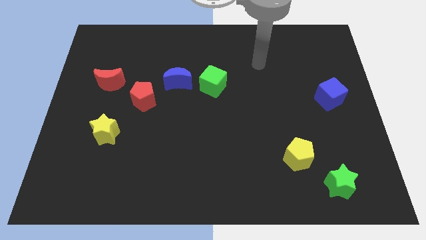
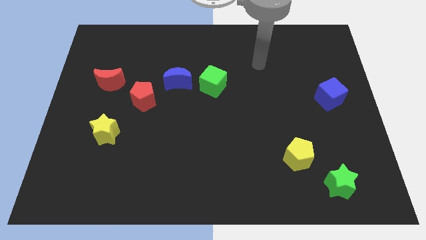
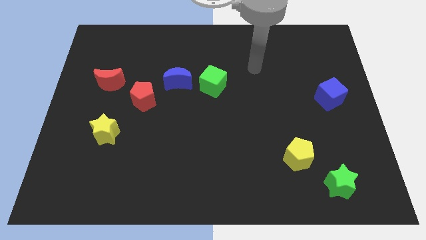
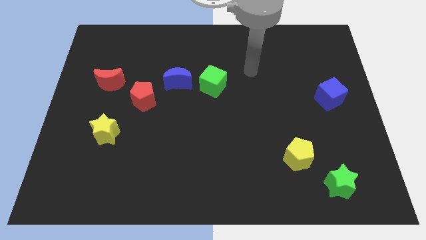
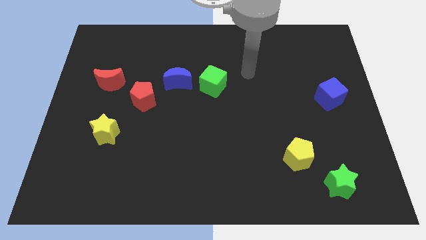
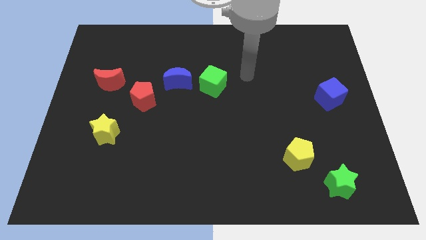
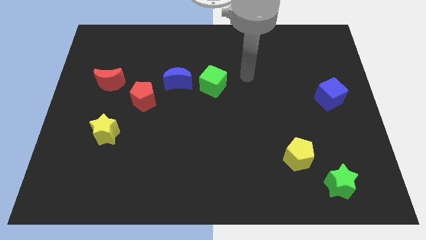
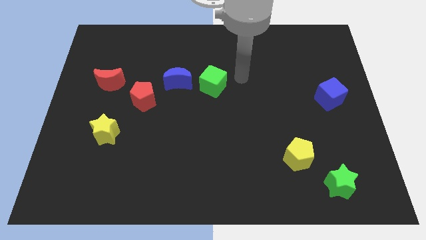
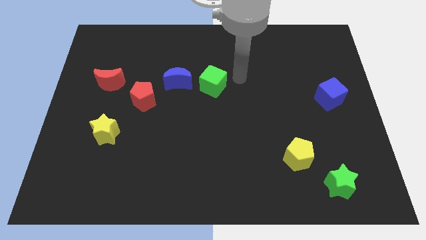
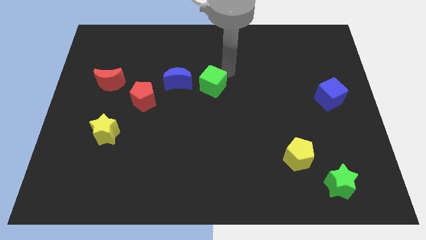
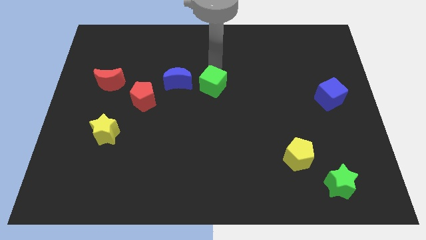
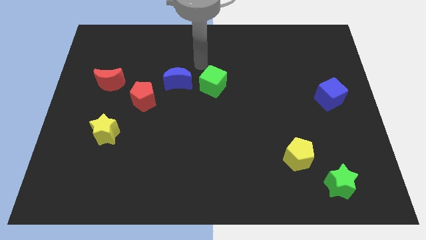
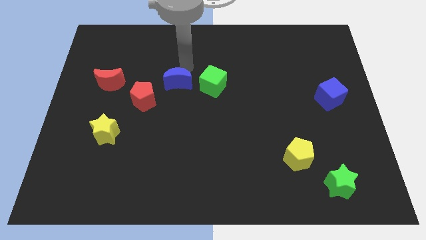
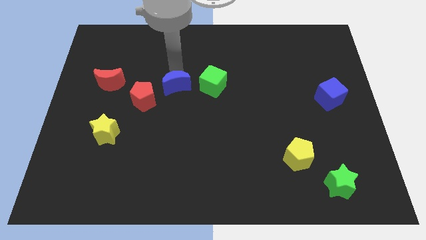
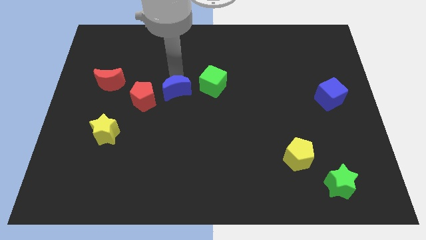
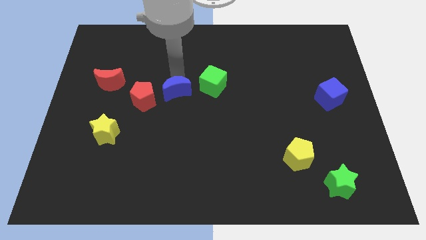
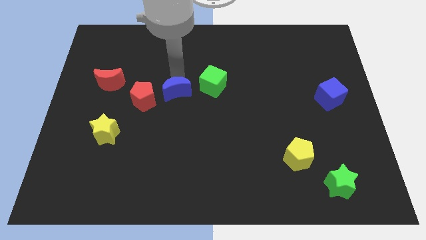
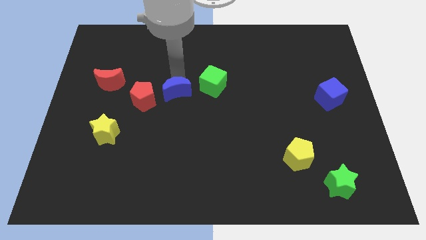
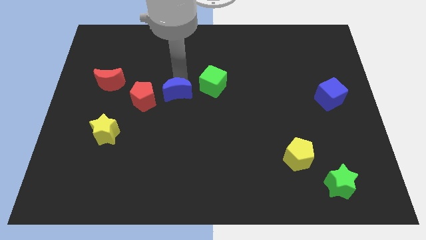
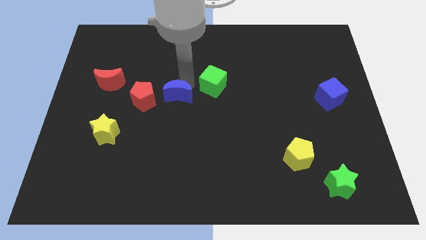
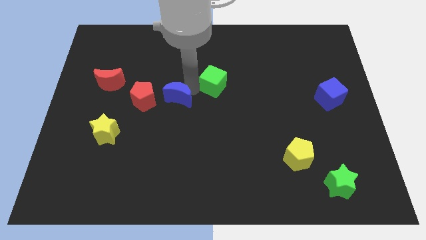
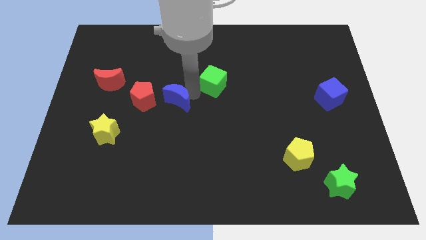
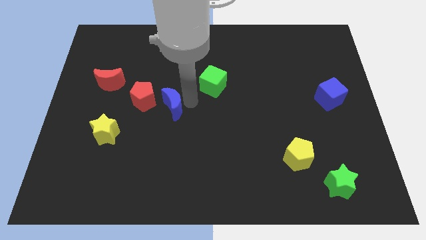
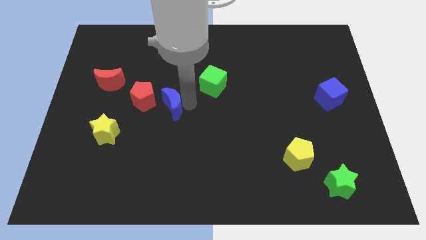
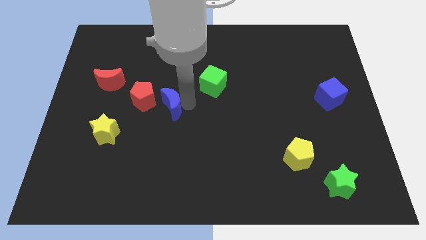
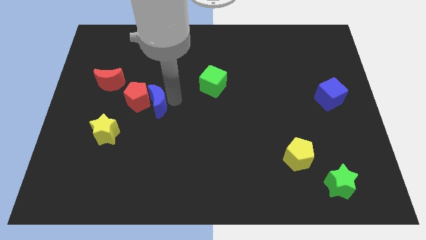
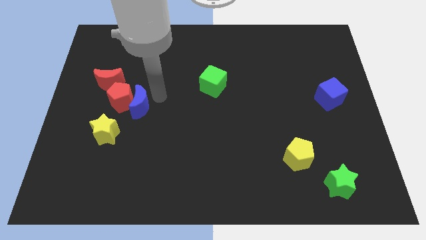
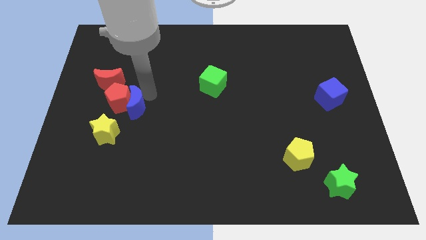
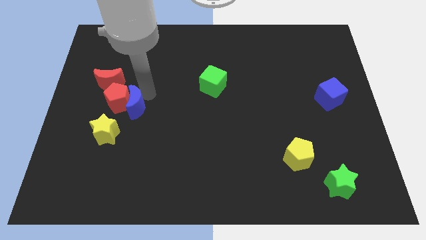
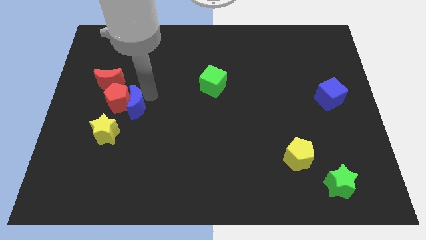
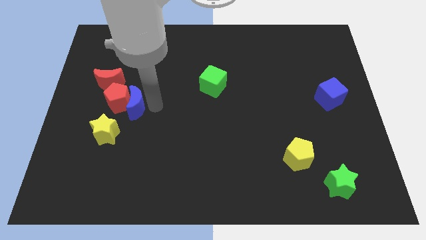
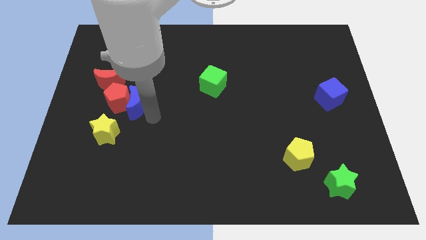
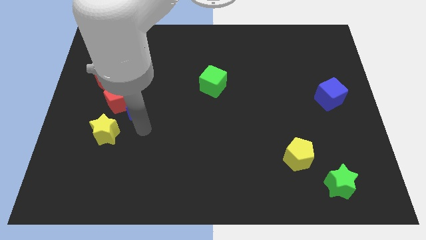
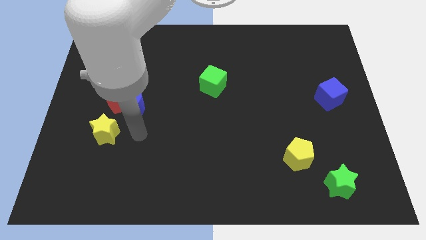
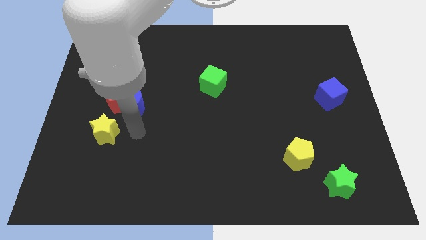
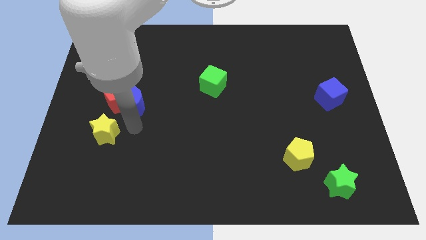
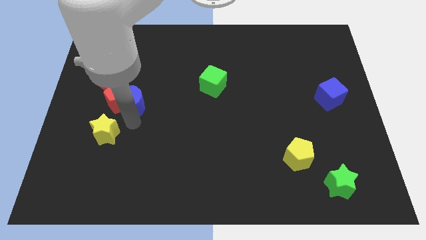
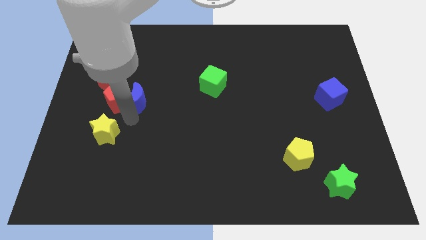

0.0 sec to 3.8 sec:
push the blue crescent to the right of the red pentagon

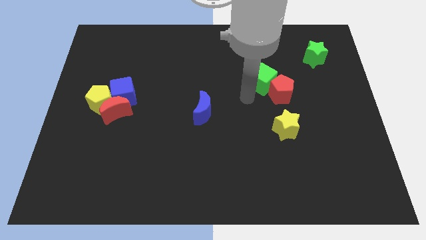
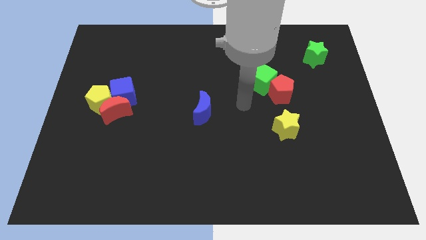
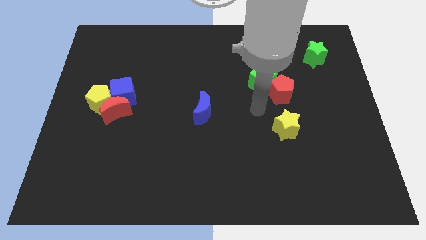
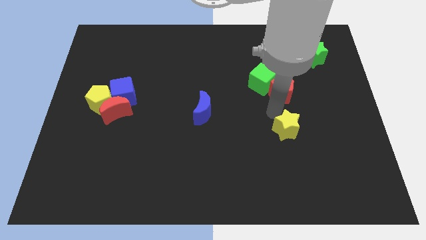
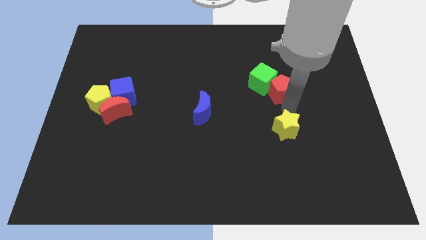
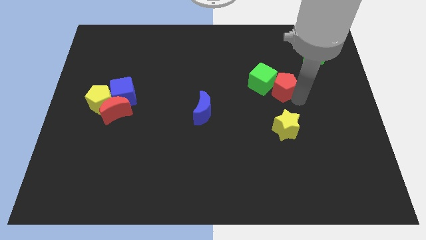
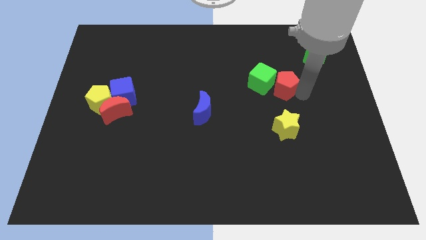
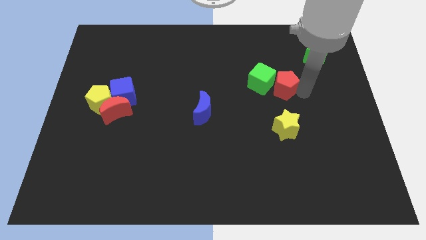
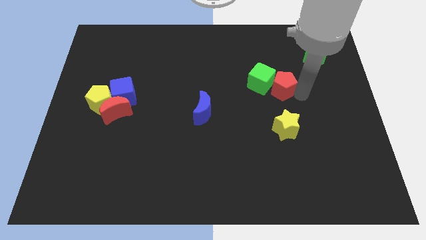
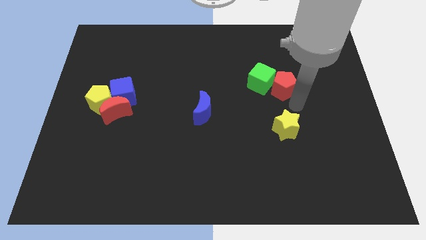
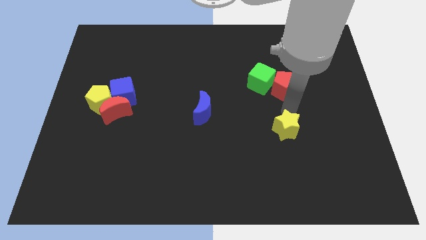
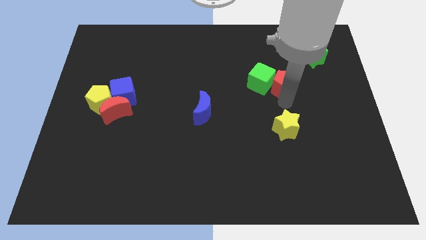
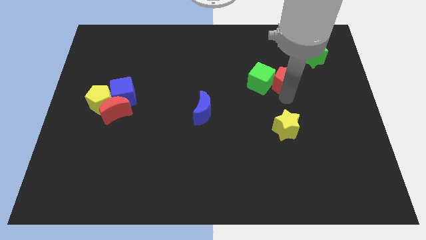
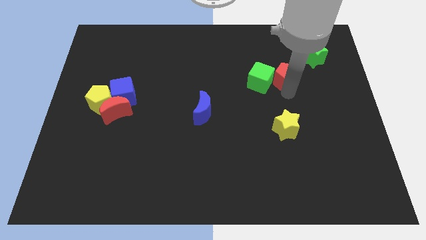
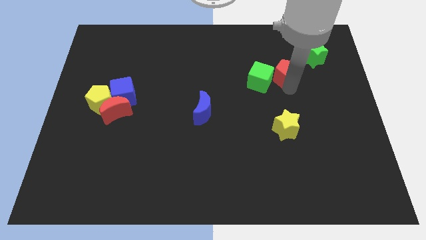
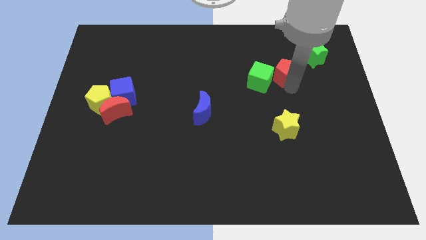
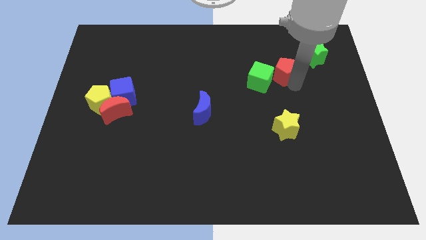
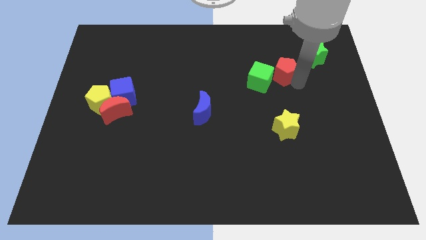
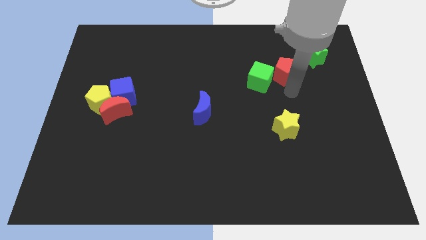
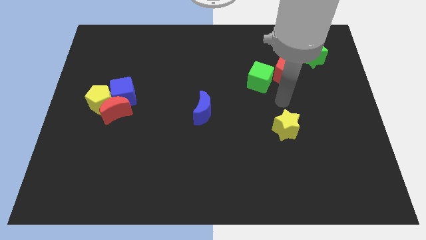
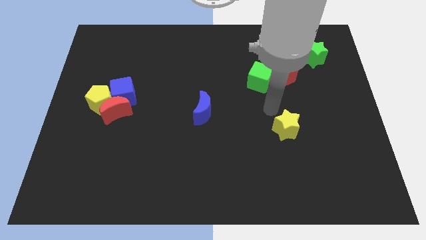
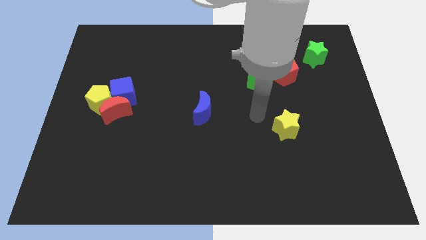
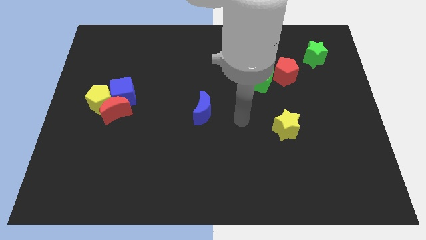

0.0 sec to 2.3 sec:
place the red pentagon in between green star and green cube

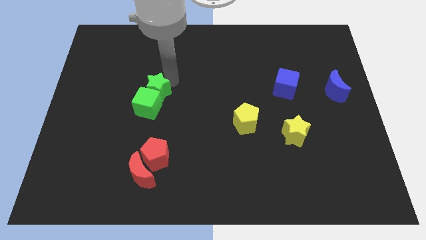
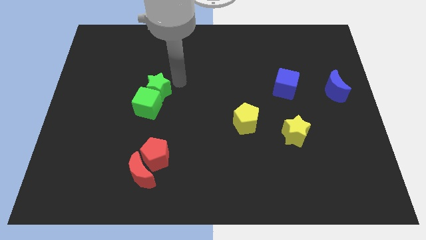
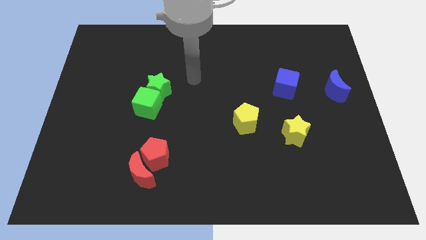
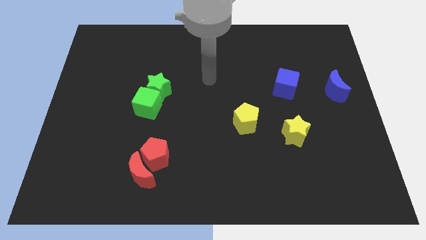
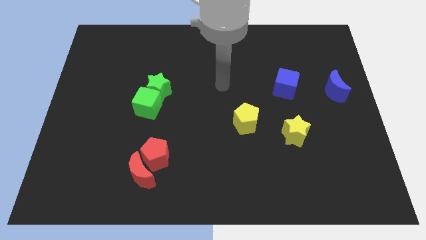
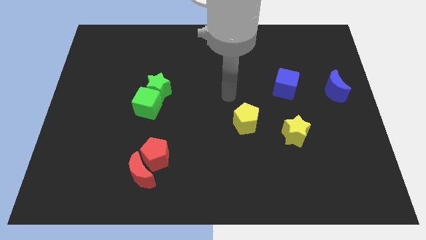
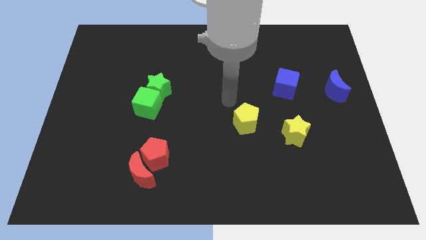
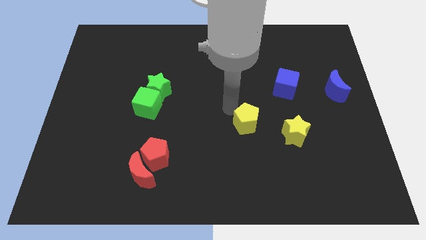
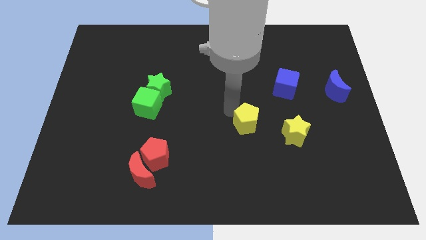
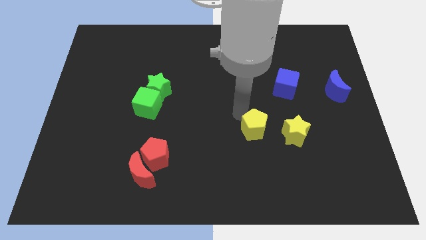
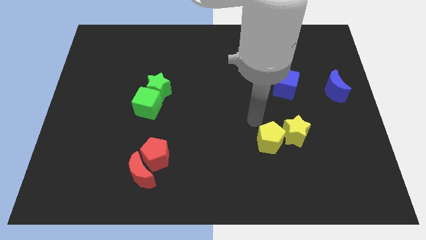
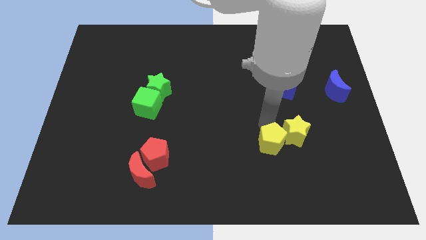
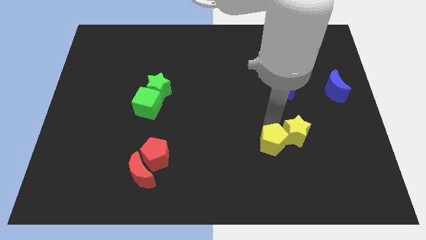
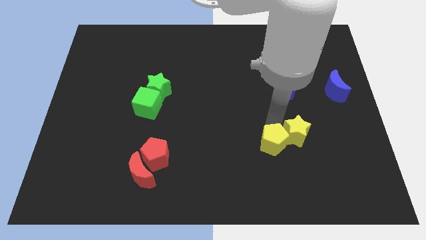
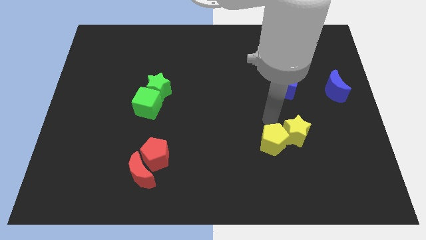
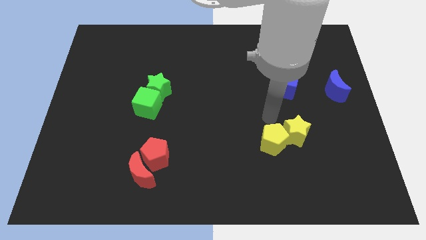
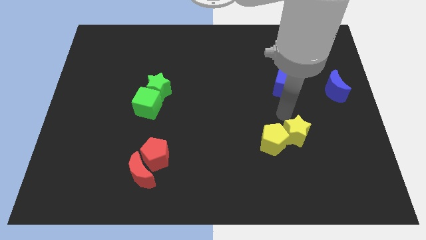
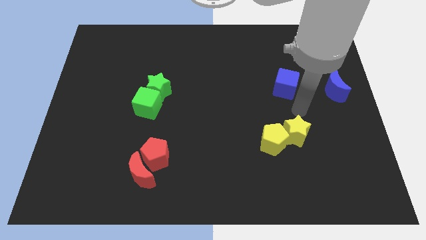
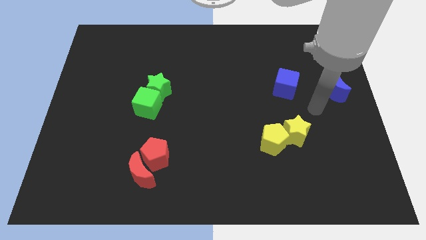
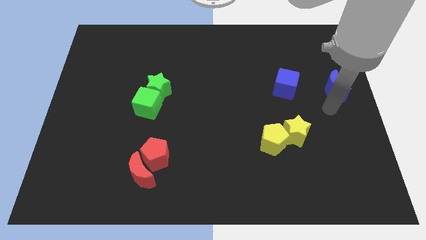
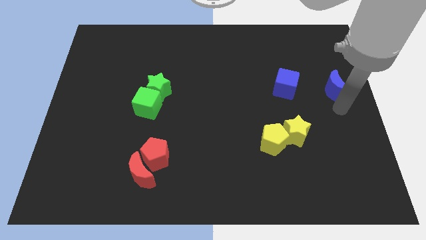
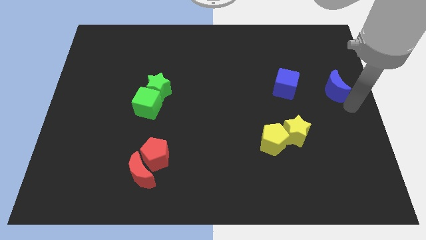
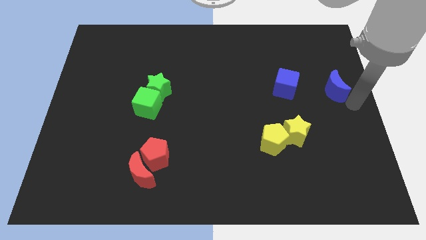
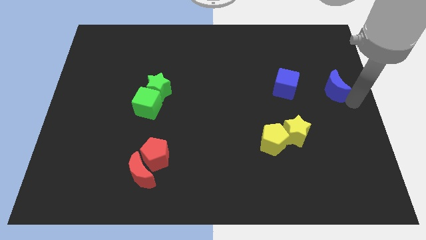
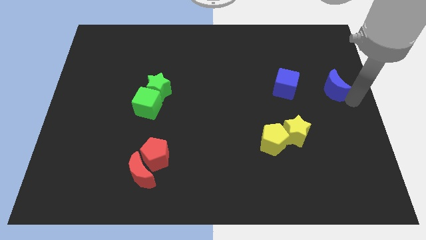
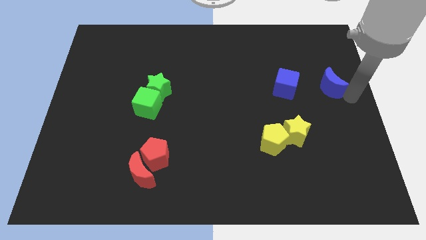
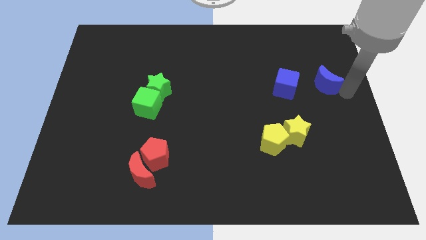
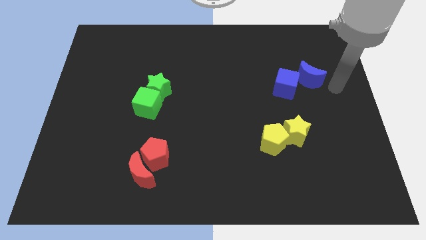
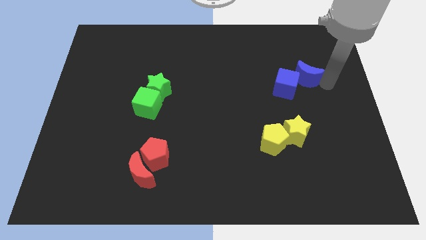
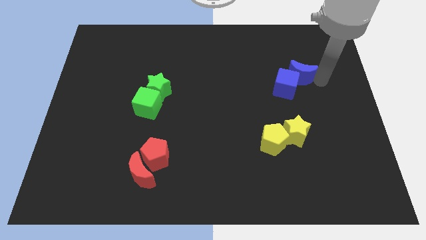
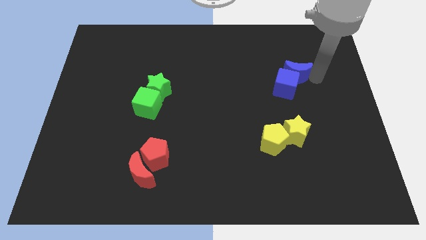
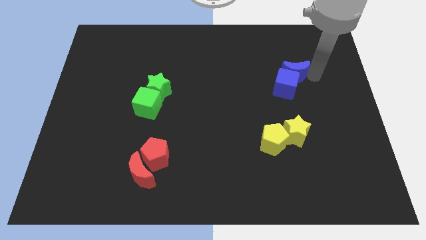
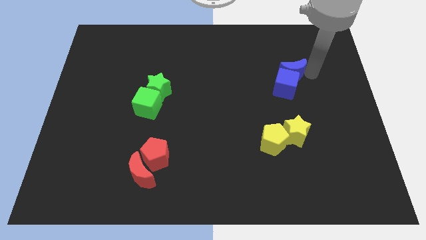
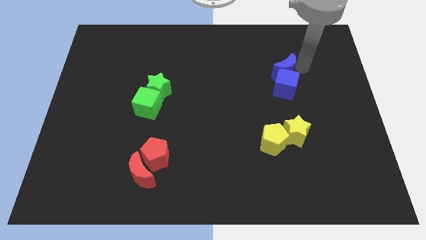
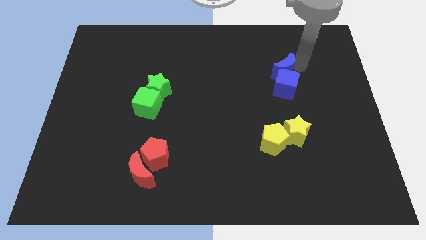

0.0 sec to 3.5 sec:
group up the yellow and blue blocks at the right side of the board
